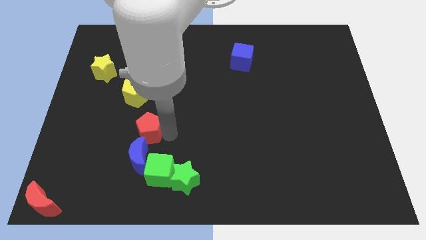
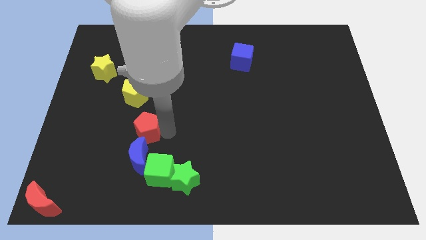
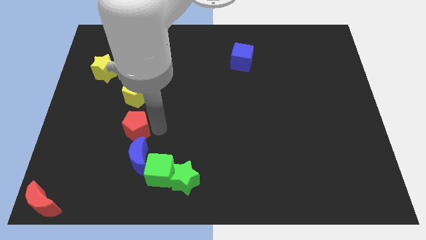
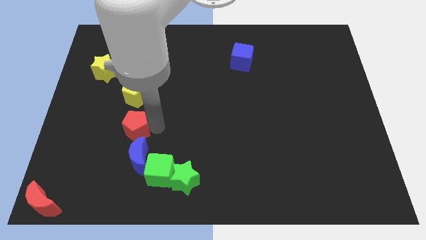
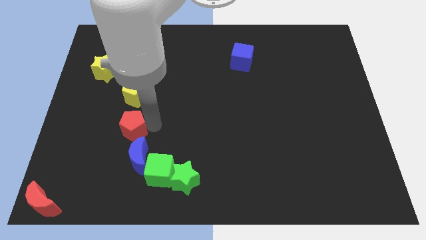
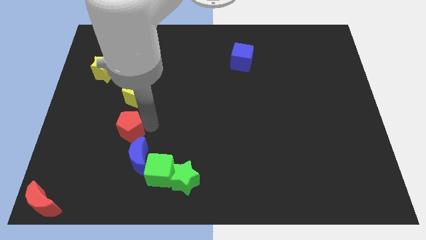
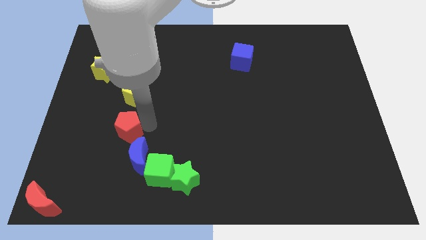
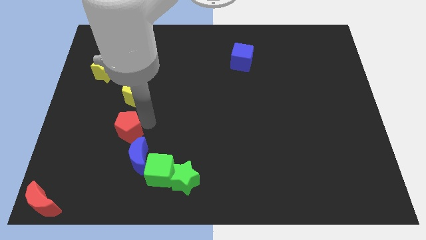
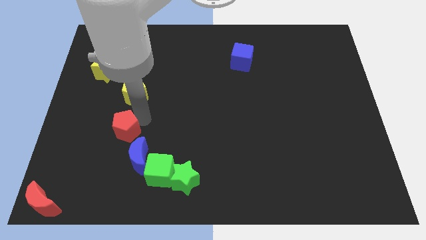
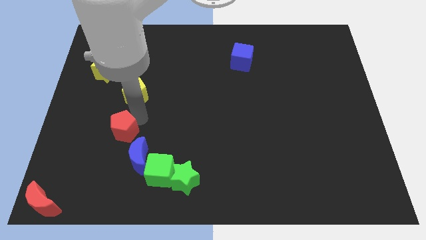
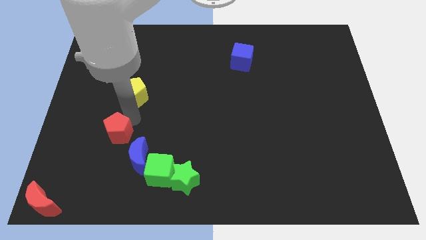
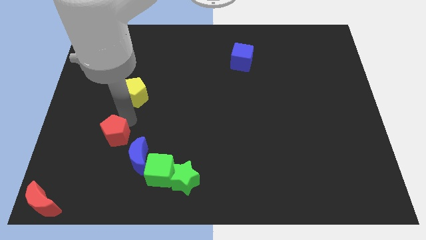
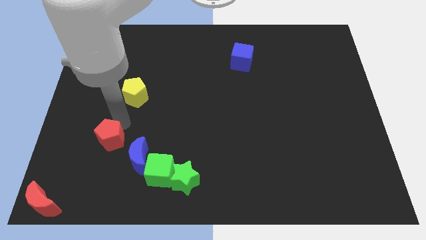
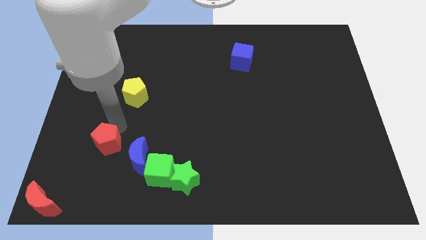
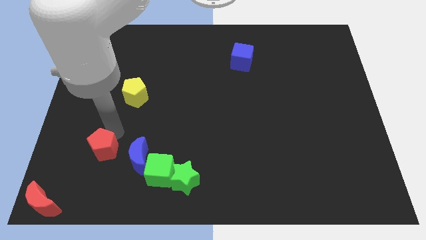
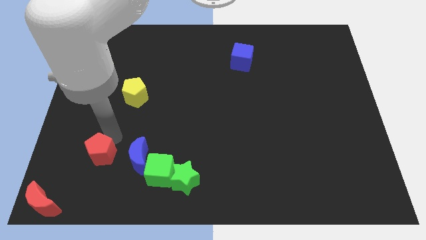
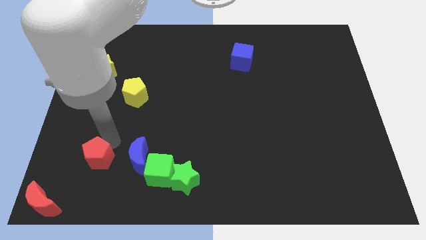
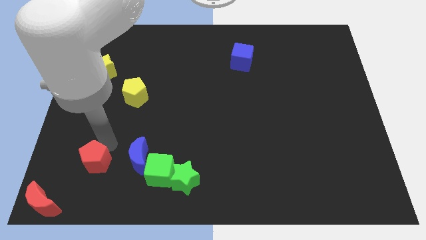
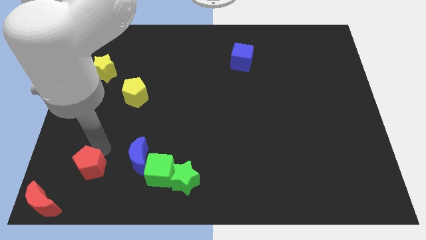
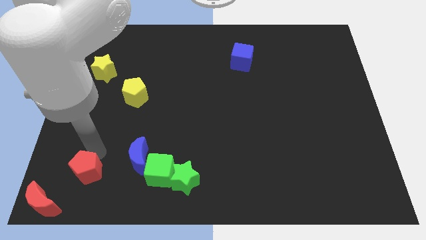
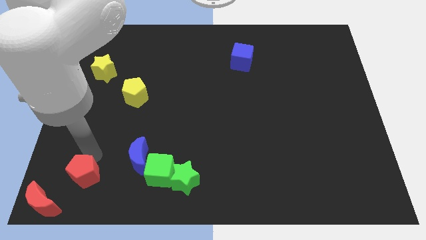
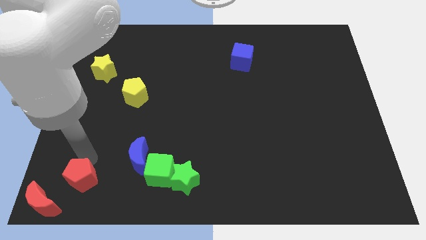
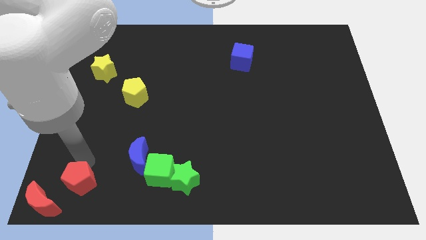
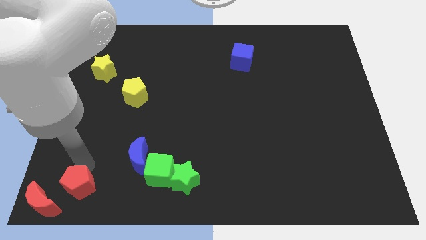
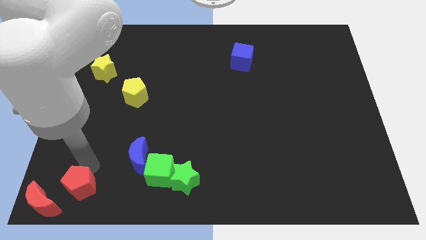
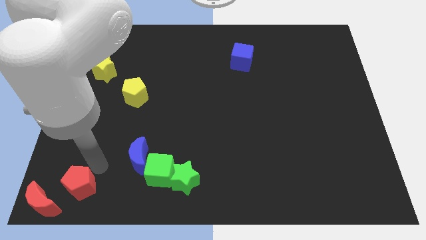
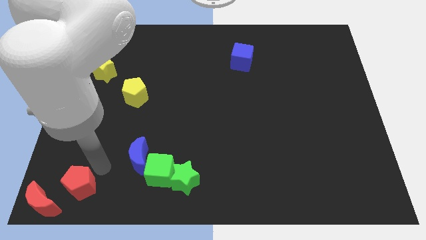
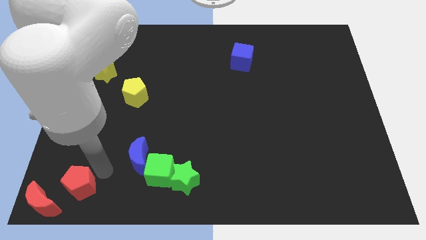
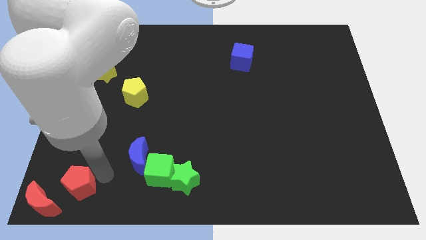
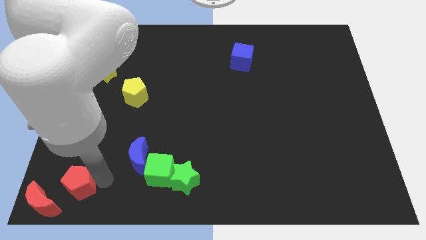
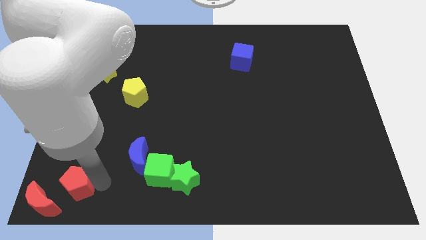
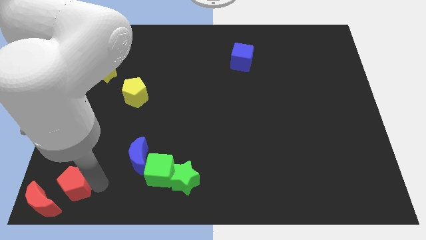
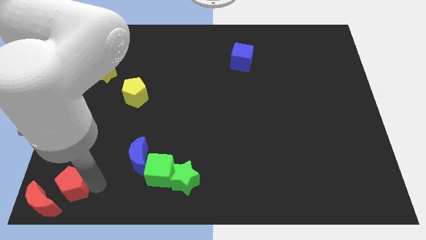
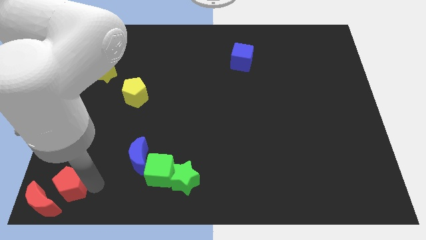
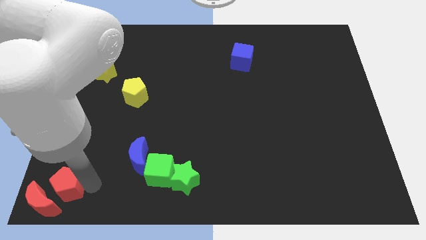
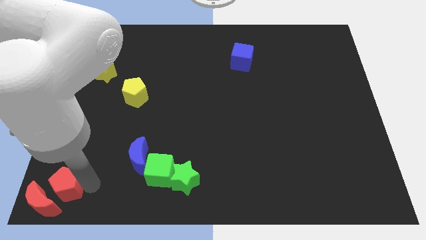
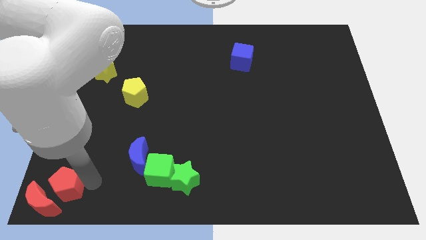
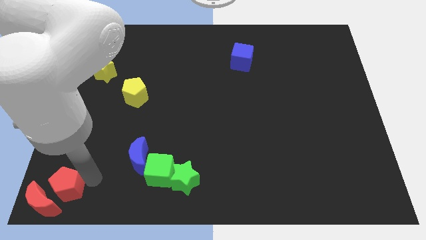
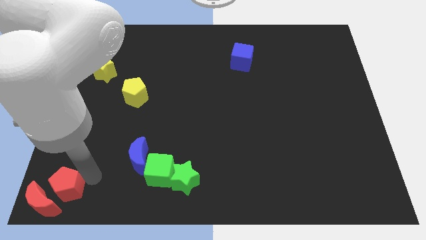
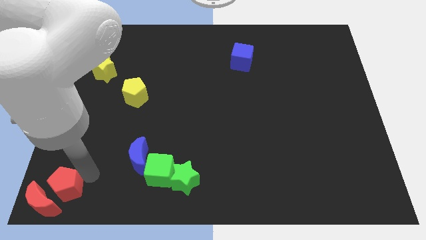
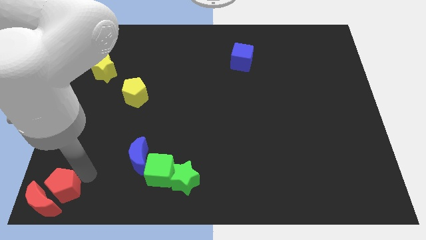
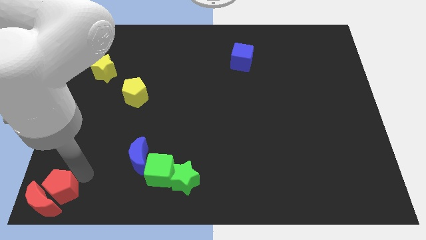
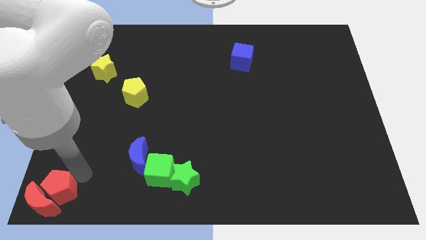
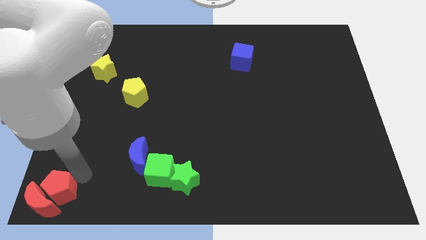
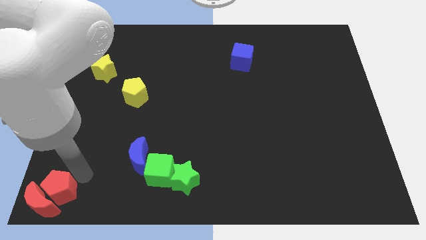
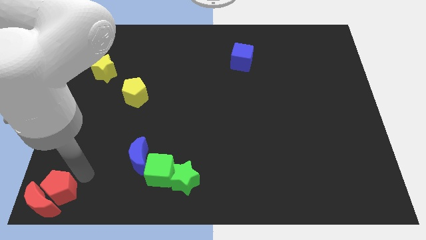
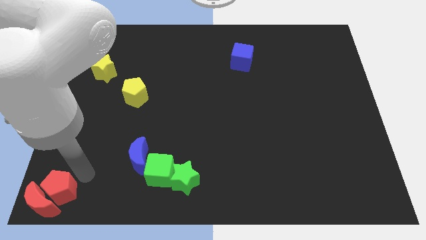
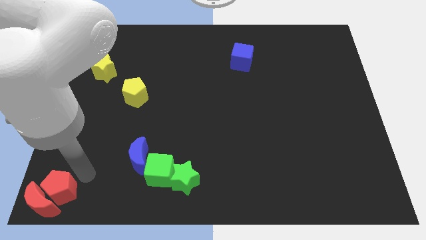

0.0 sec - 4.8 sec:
push the red pentagon to the top side of the red crescent

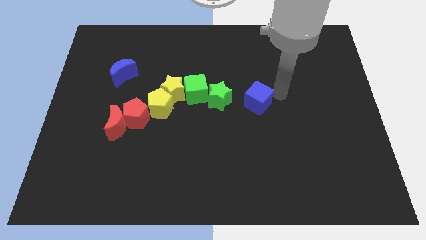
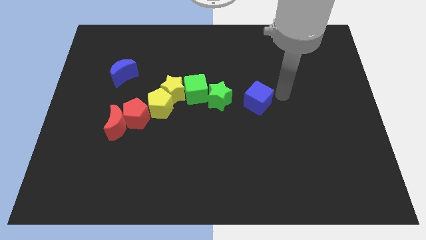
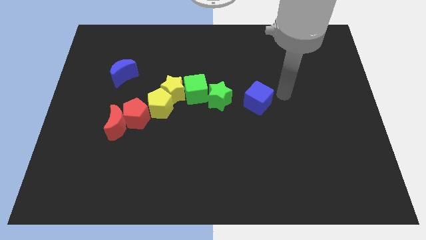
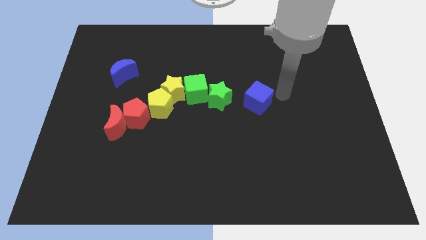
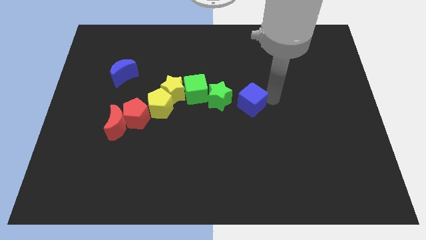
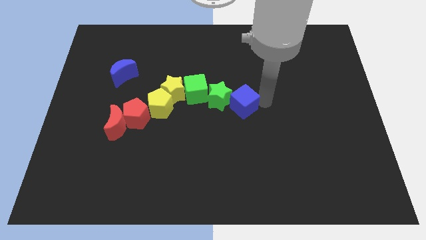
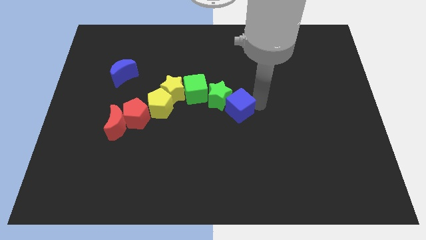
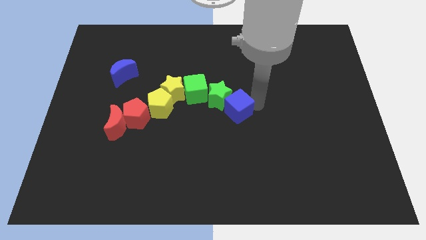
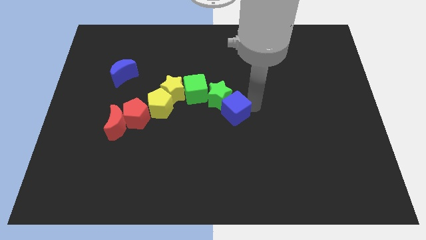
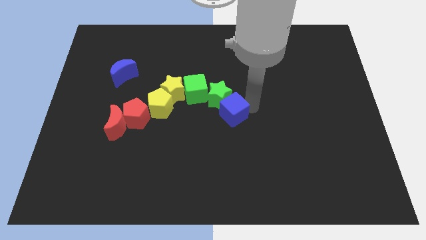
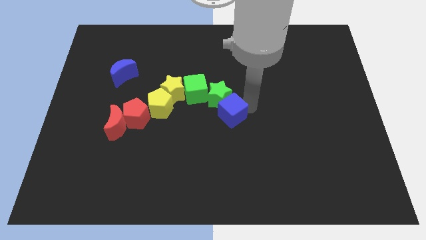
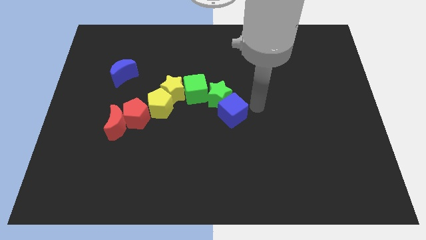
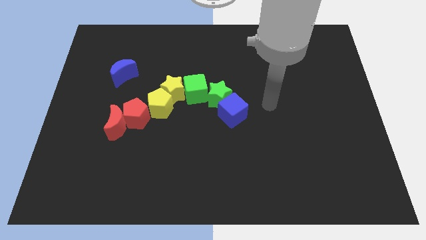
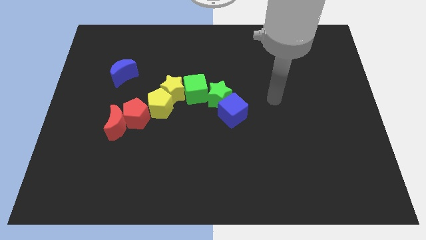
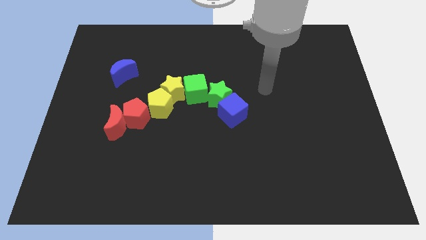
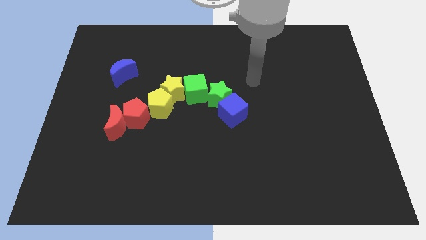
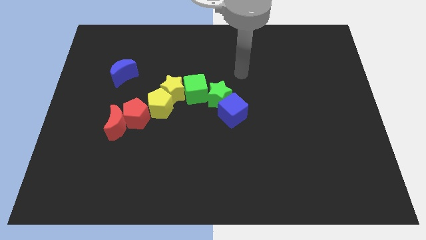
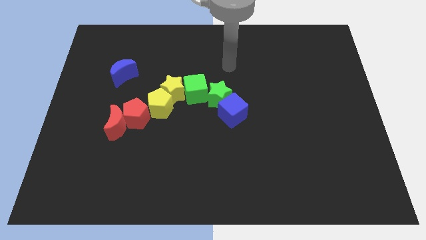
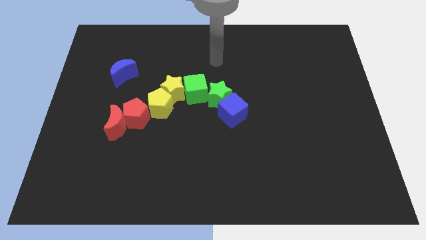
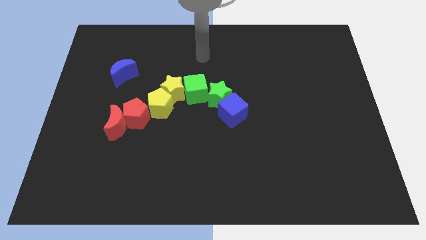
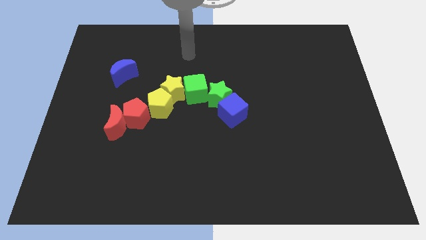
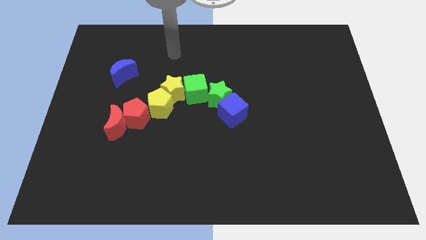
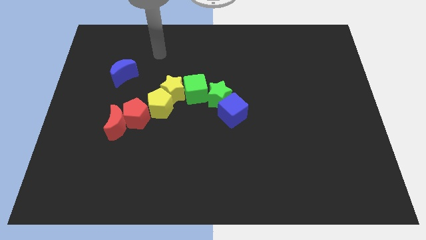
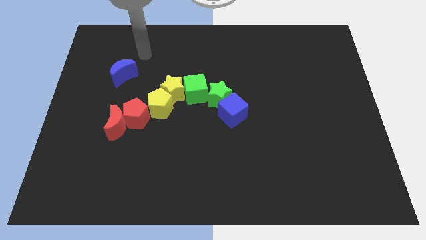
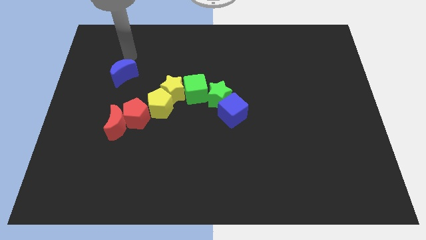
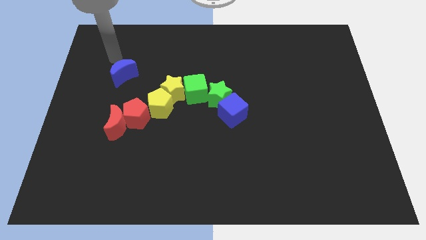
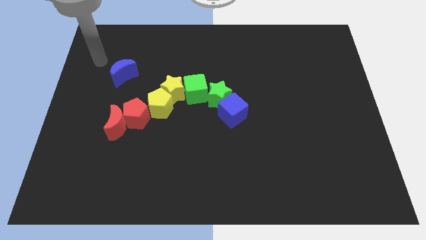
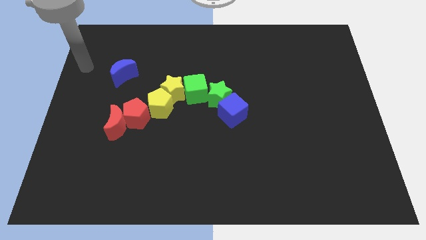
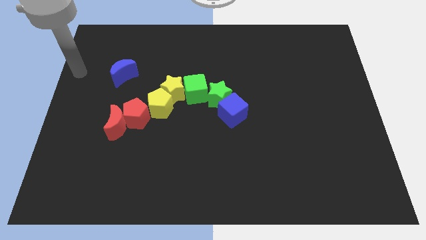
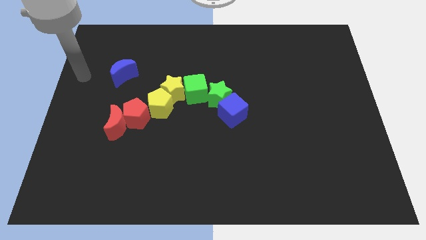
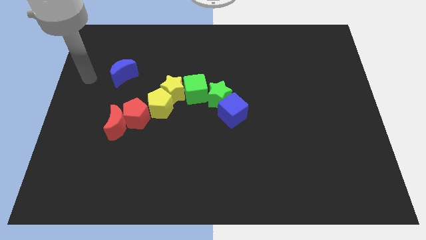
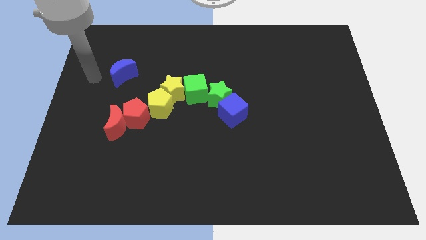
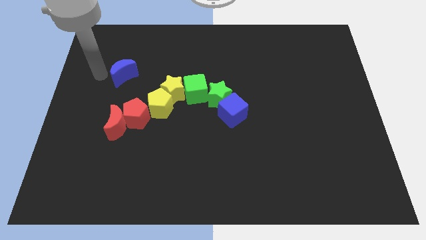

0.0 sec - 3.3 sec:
put the blue cube at the bottom right of the green star and go away

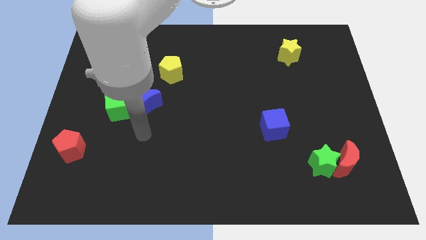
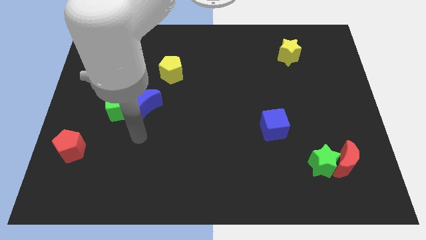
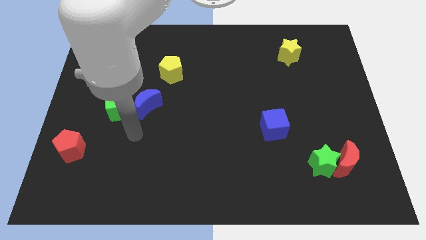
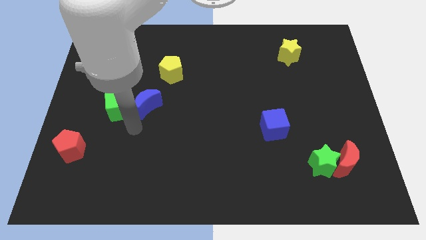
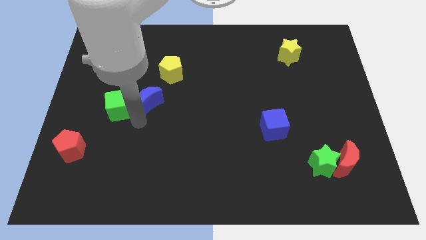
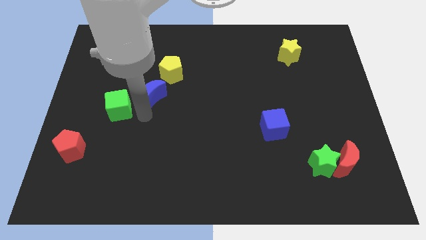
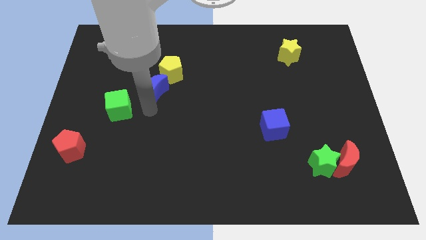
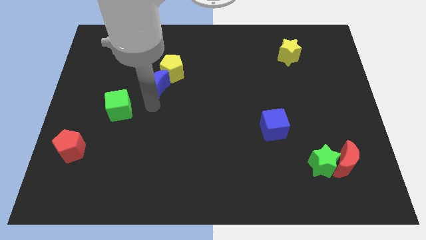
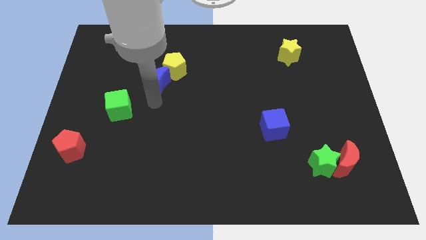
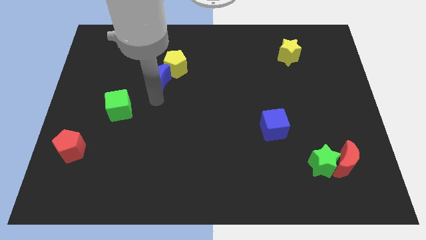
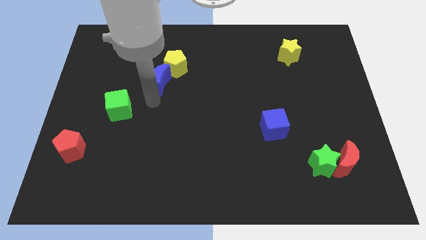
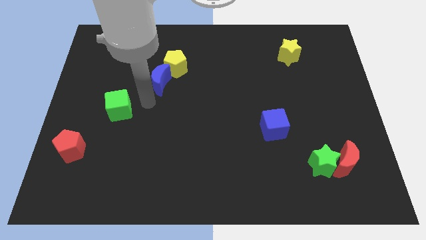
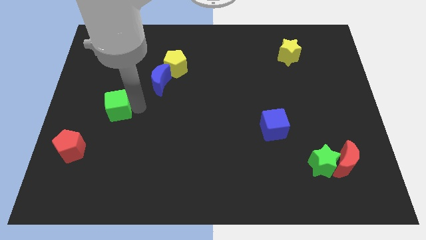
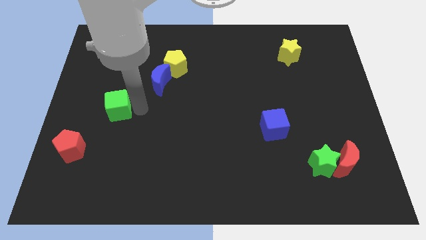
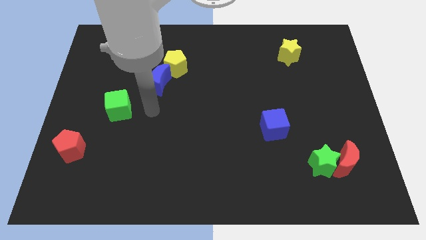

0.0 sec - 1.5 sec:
push blue moon into yellow pentagon
